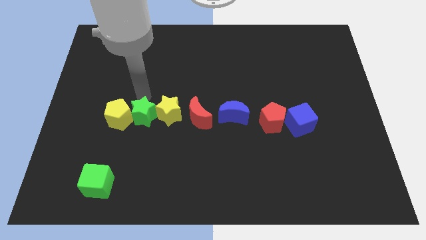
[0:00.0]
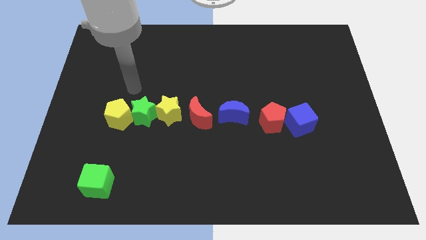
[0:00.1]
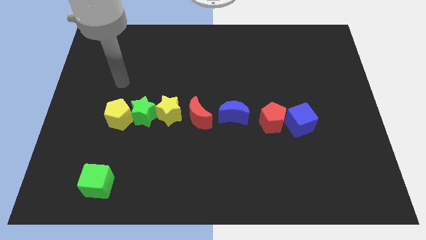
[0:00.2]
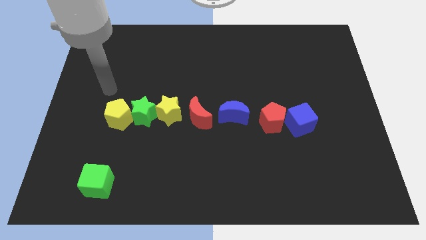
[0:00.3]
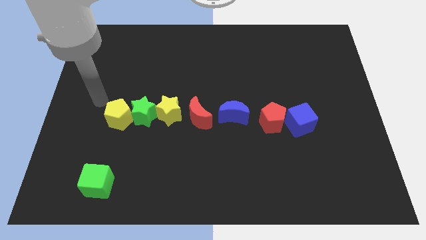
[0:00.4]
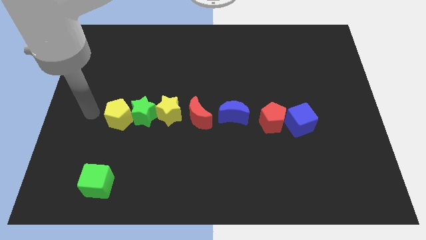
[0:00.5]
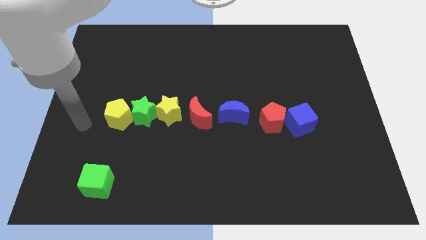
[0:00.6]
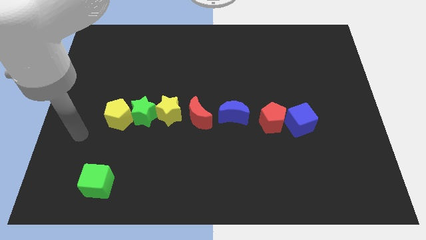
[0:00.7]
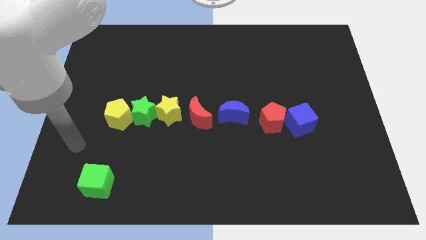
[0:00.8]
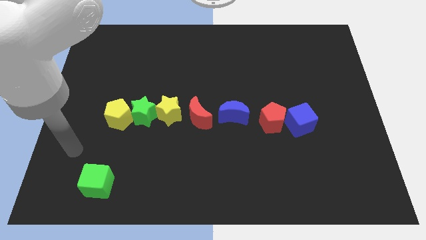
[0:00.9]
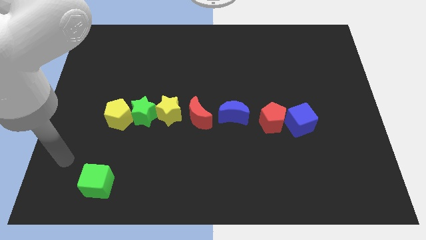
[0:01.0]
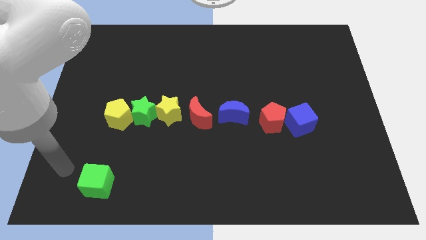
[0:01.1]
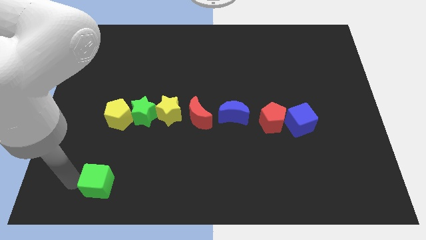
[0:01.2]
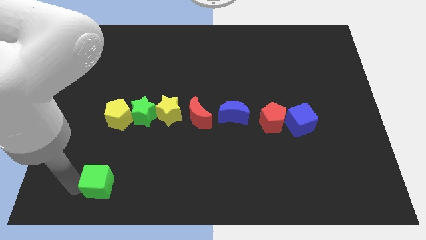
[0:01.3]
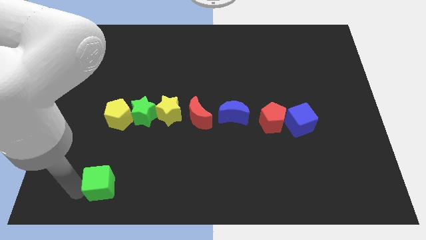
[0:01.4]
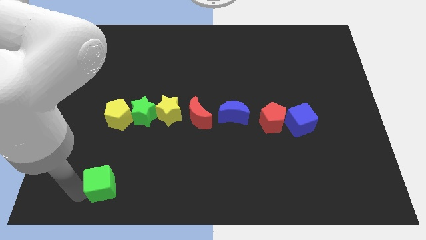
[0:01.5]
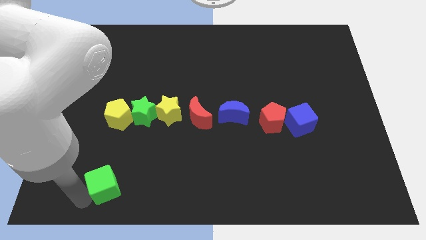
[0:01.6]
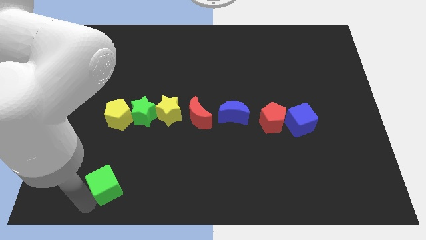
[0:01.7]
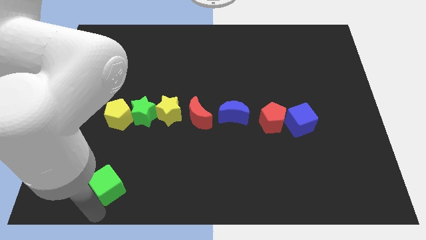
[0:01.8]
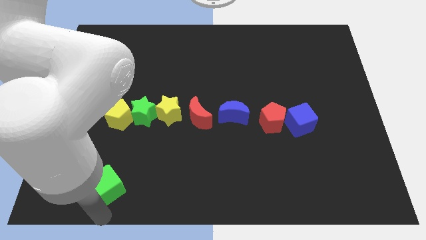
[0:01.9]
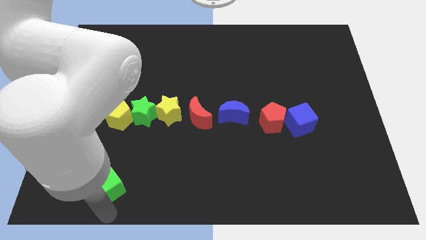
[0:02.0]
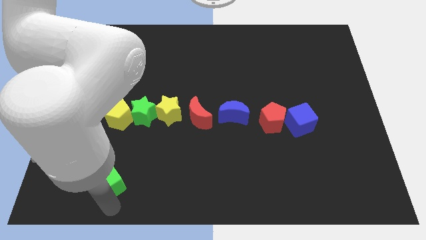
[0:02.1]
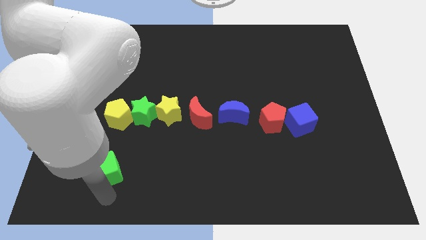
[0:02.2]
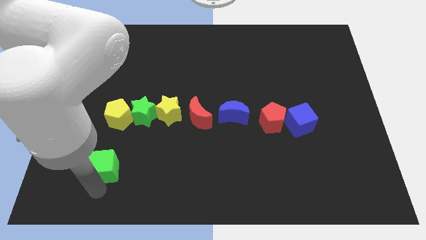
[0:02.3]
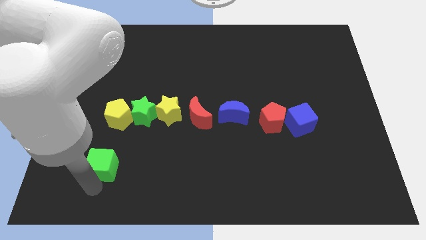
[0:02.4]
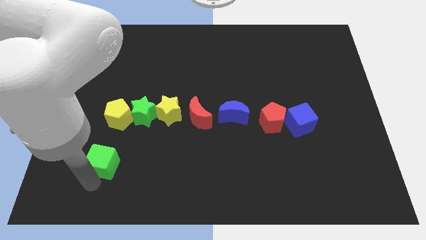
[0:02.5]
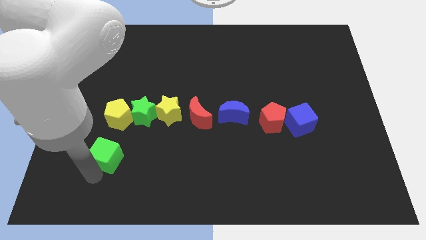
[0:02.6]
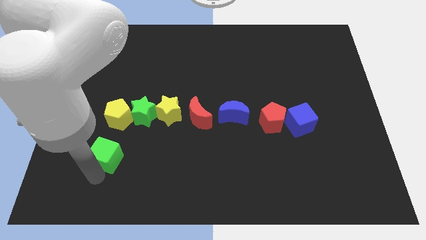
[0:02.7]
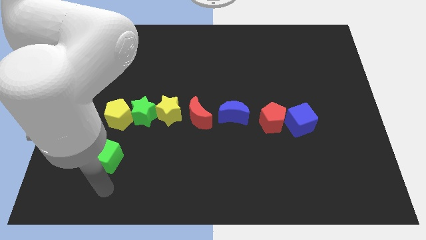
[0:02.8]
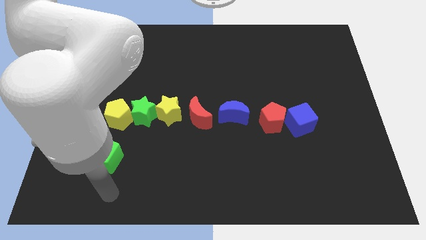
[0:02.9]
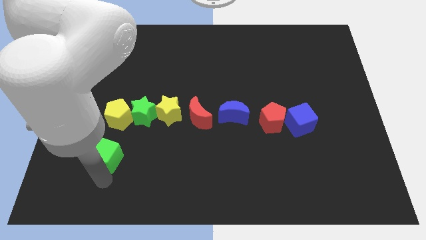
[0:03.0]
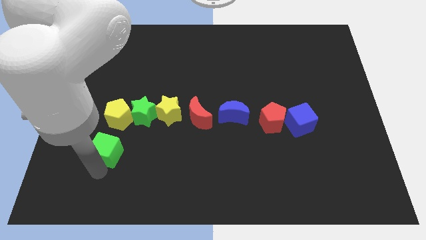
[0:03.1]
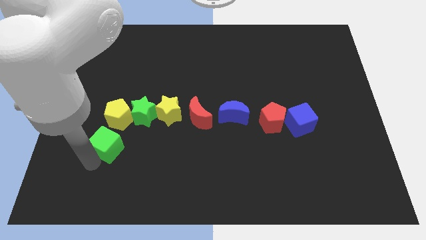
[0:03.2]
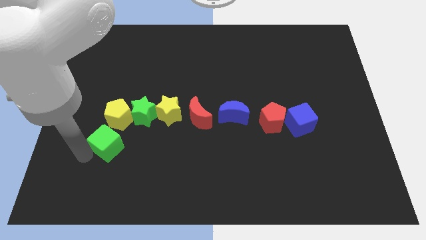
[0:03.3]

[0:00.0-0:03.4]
slide the green cube slightly towards the yellow pentagon

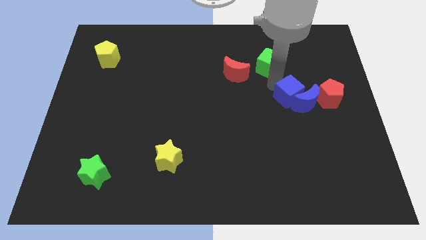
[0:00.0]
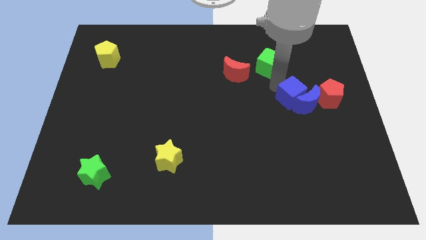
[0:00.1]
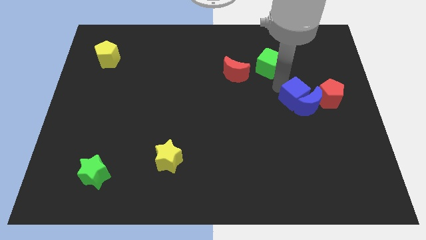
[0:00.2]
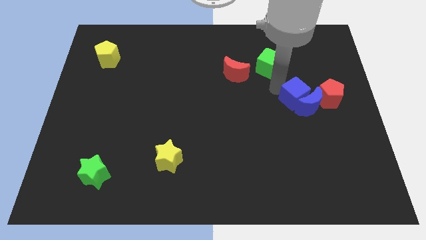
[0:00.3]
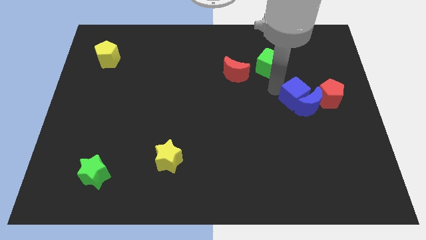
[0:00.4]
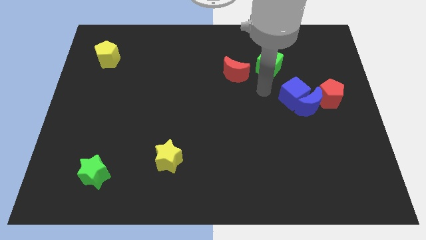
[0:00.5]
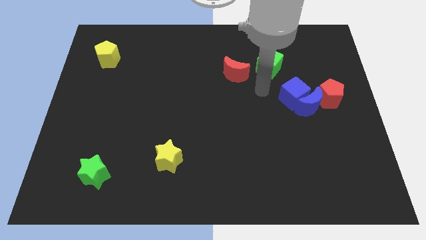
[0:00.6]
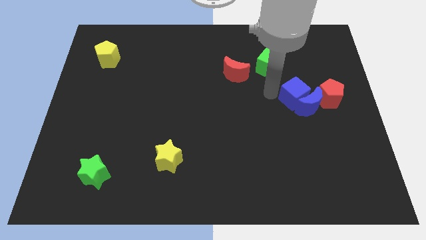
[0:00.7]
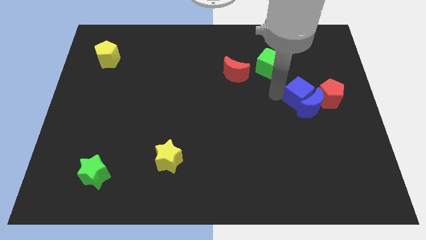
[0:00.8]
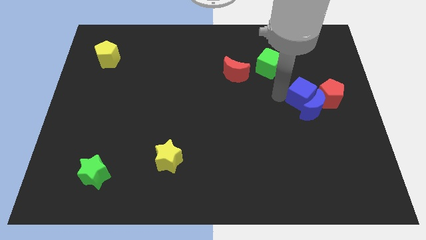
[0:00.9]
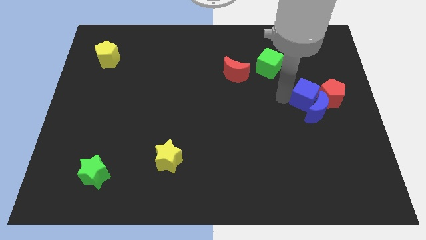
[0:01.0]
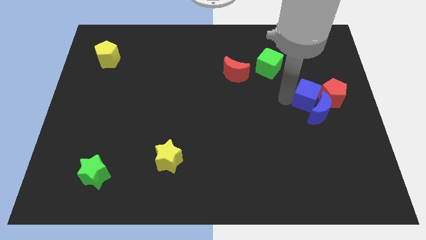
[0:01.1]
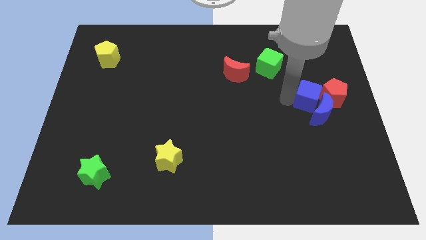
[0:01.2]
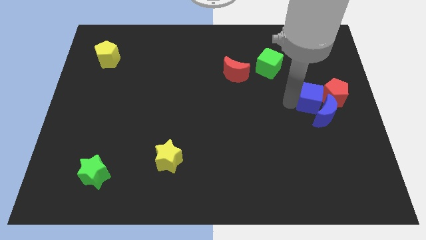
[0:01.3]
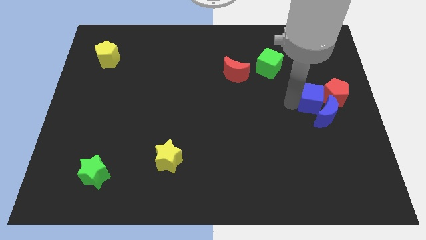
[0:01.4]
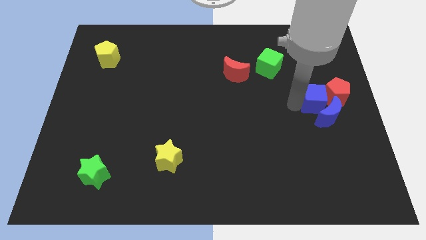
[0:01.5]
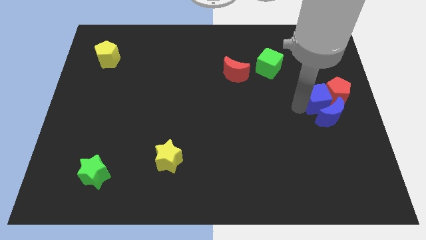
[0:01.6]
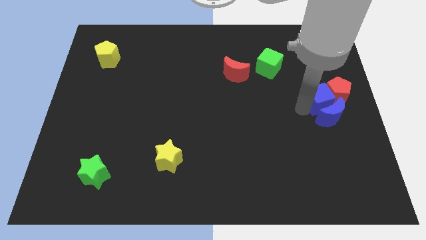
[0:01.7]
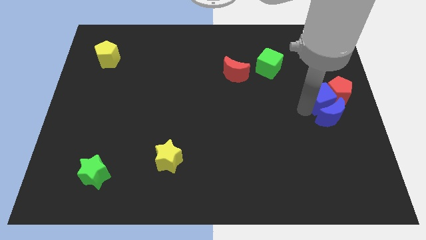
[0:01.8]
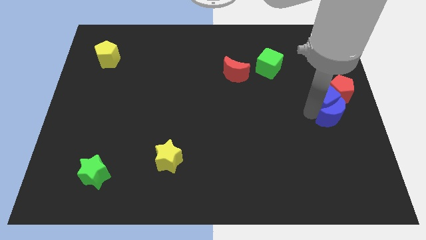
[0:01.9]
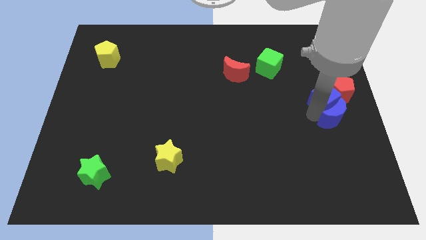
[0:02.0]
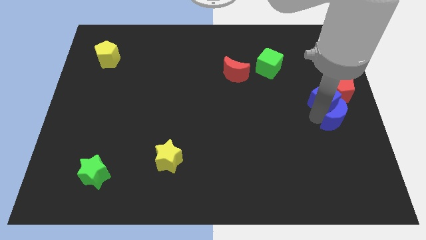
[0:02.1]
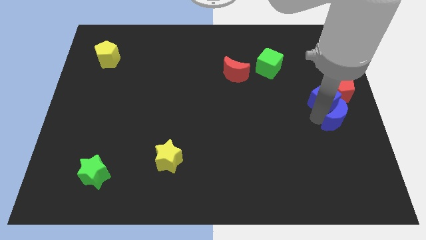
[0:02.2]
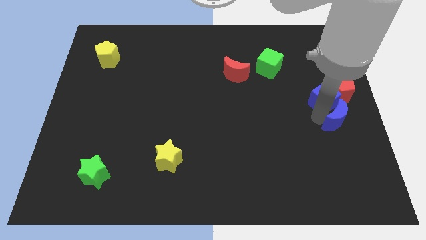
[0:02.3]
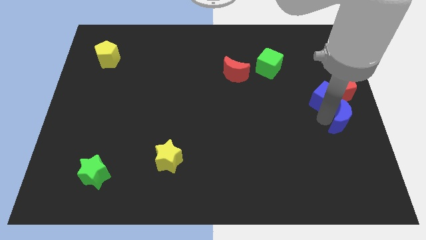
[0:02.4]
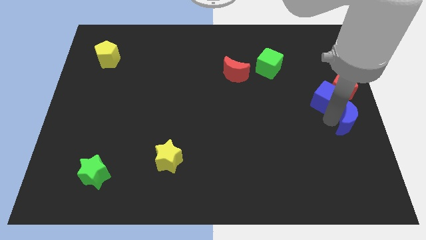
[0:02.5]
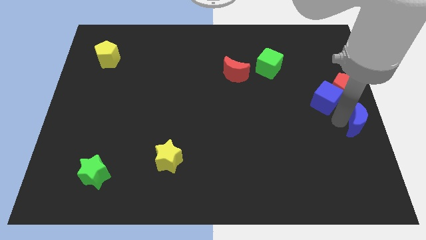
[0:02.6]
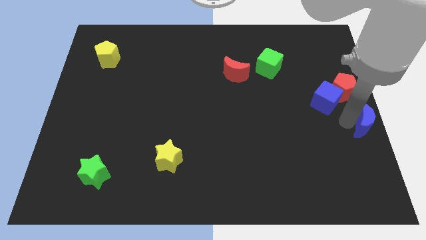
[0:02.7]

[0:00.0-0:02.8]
push the blue cube to the right side slightly

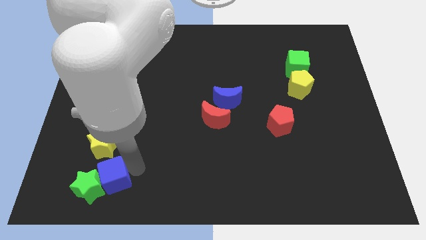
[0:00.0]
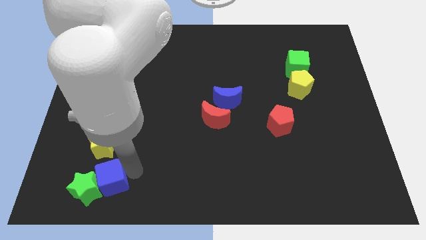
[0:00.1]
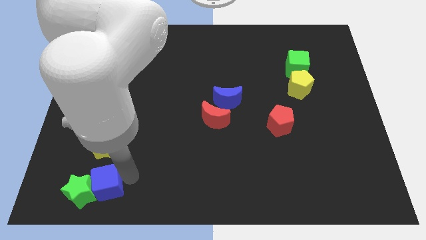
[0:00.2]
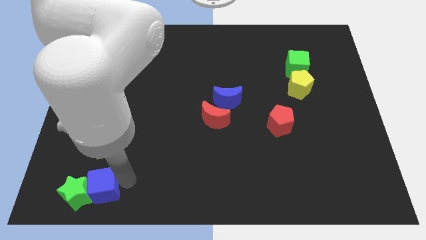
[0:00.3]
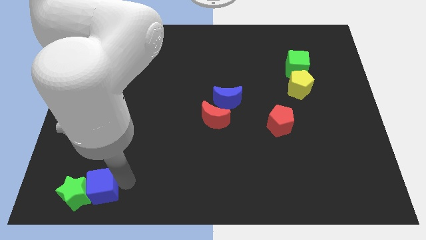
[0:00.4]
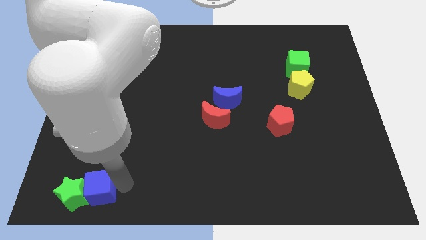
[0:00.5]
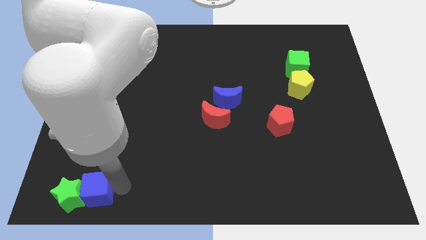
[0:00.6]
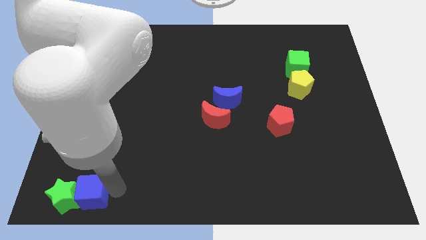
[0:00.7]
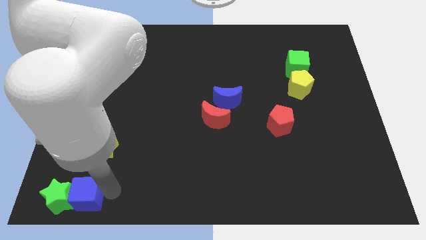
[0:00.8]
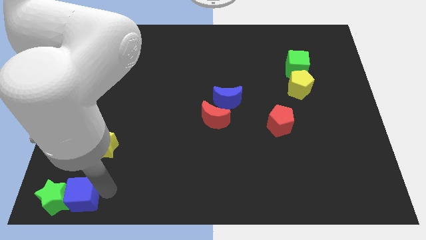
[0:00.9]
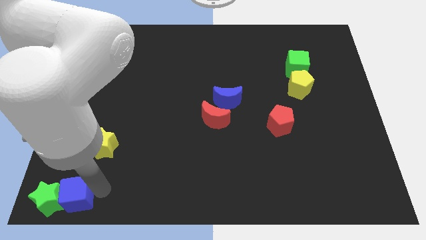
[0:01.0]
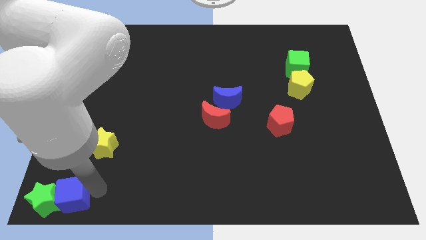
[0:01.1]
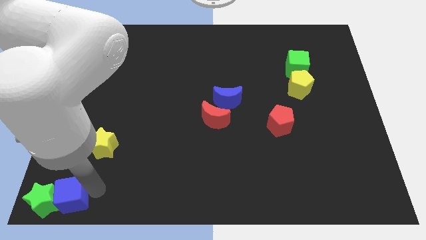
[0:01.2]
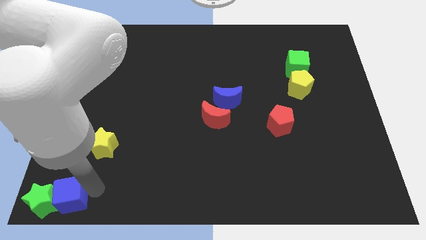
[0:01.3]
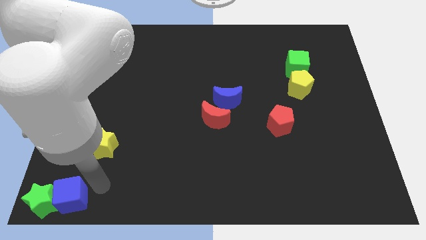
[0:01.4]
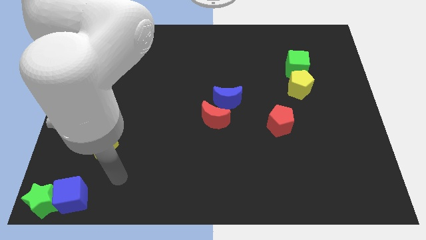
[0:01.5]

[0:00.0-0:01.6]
place green star and blue cube at the bottom left corner of the board

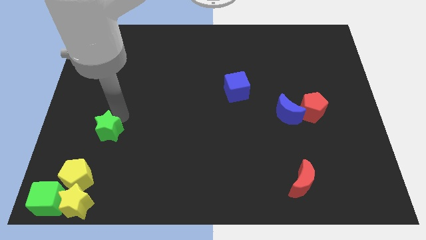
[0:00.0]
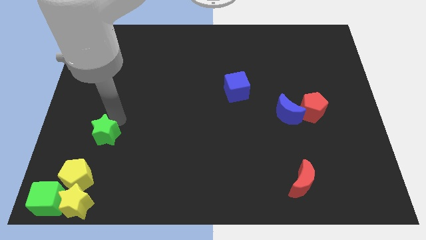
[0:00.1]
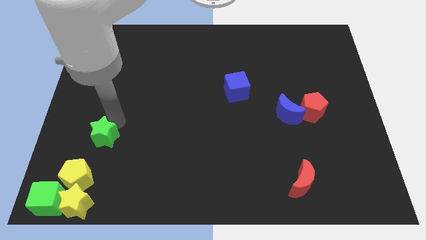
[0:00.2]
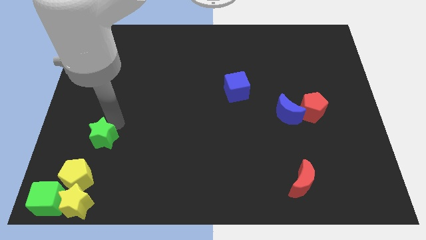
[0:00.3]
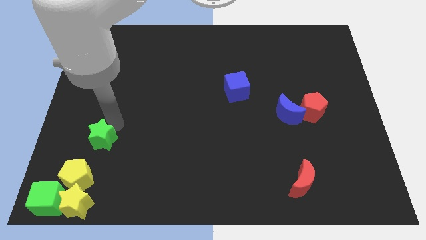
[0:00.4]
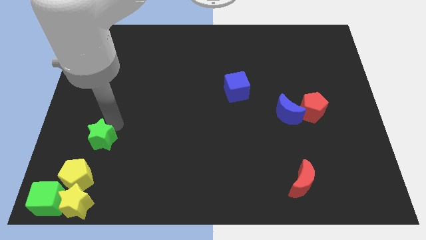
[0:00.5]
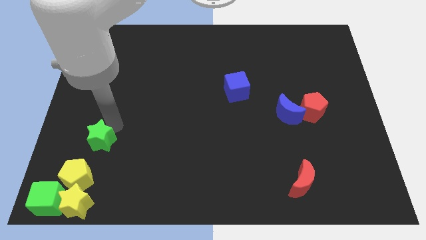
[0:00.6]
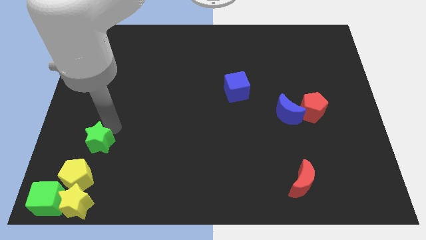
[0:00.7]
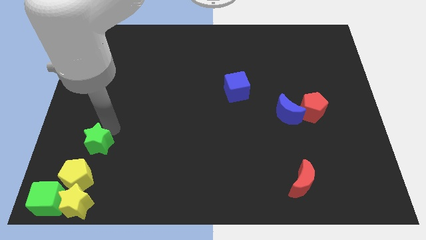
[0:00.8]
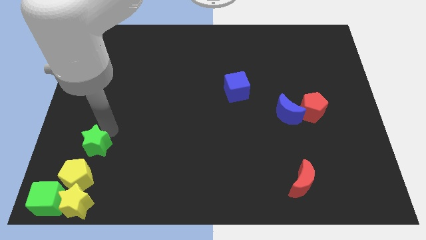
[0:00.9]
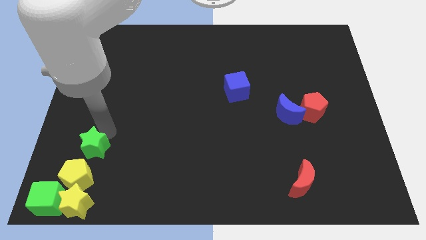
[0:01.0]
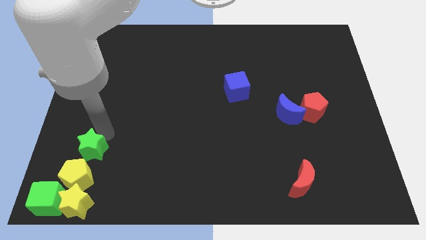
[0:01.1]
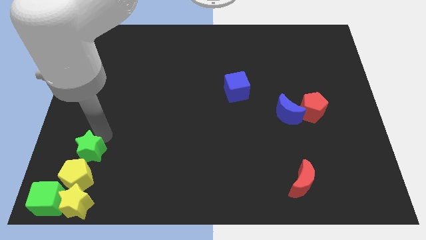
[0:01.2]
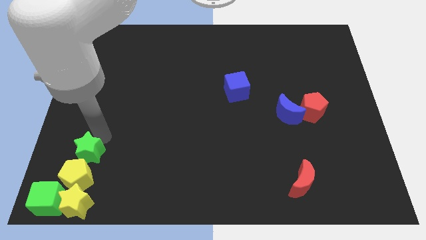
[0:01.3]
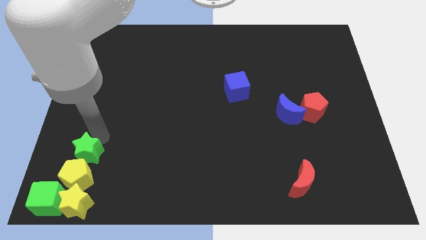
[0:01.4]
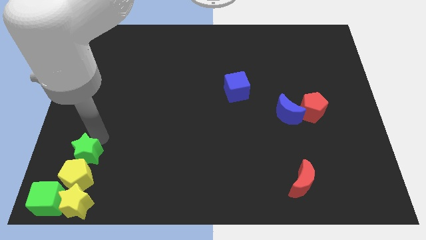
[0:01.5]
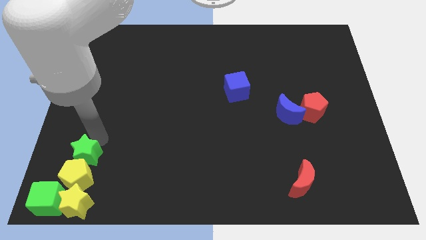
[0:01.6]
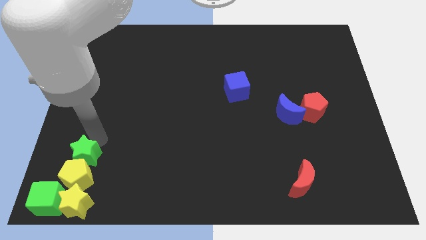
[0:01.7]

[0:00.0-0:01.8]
place the green star above the yellow pentagon
